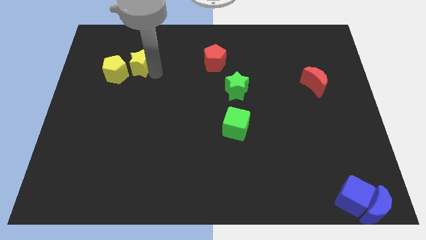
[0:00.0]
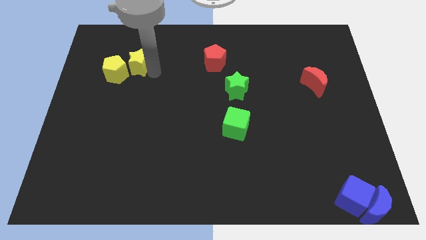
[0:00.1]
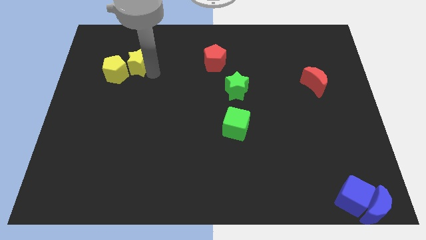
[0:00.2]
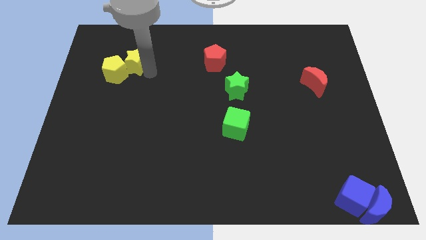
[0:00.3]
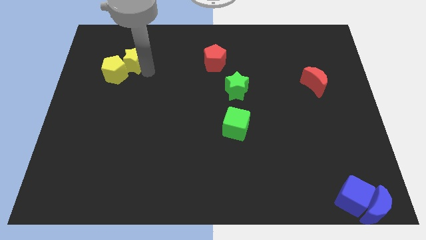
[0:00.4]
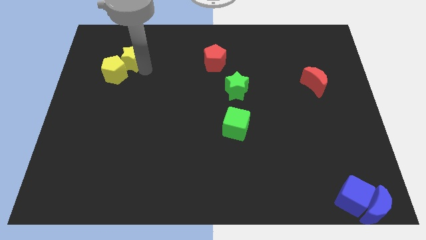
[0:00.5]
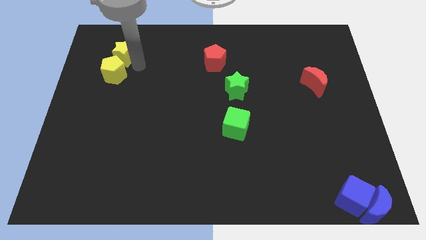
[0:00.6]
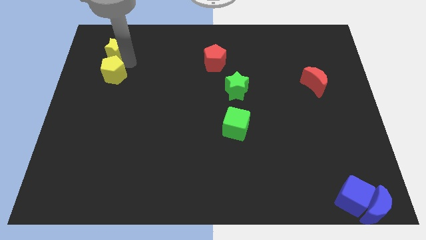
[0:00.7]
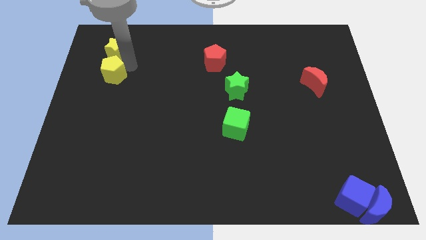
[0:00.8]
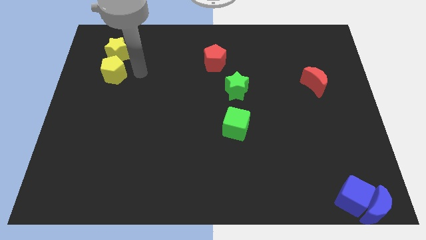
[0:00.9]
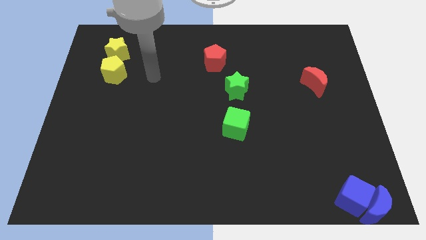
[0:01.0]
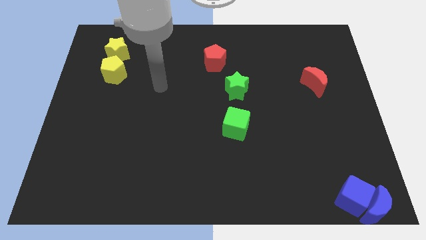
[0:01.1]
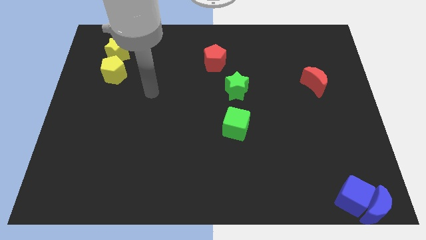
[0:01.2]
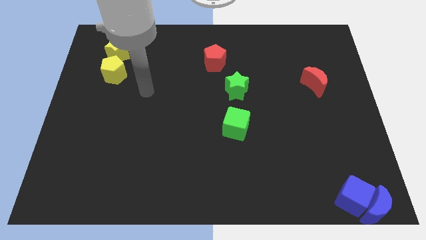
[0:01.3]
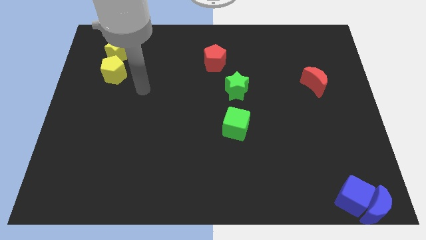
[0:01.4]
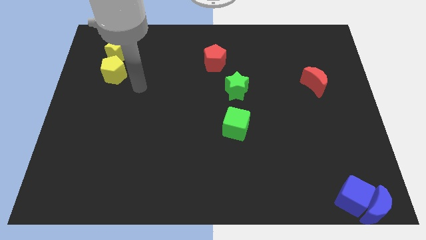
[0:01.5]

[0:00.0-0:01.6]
move the yellow star to the top of the yellow pentagon

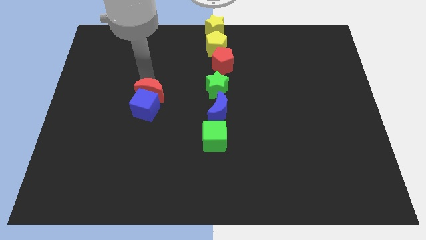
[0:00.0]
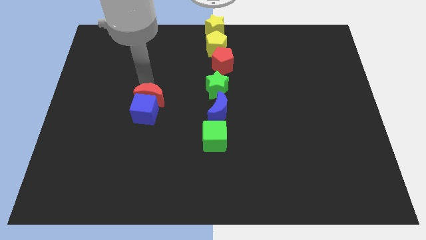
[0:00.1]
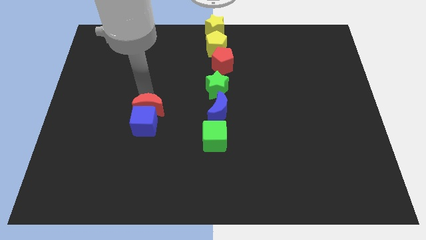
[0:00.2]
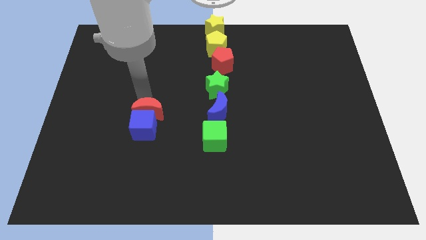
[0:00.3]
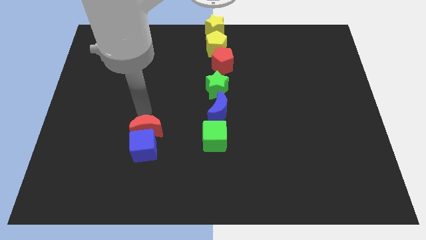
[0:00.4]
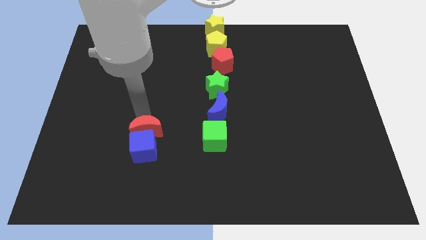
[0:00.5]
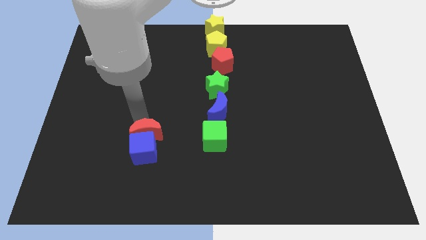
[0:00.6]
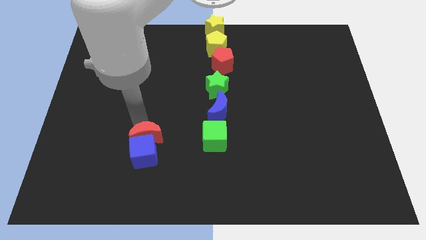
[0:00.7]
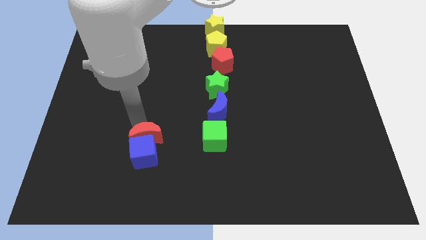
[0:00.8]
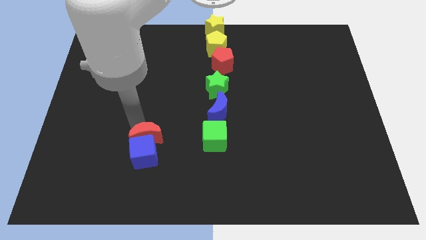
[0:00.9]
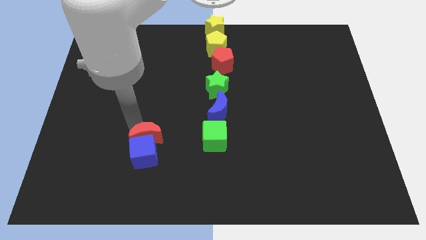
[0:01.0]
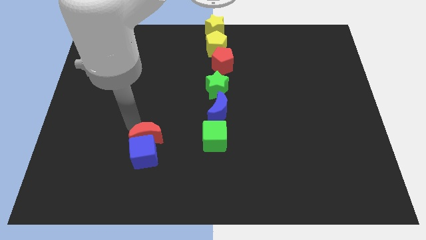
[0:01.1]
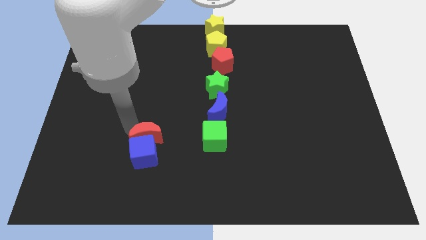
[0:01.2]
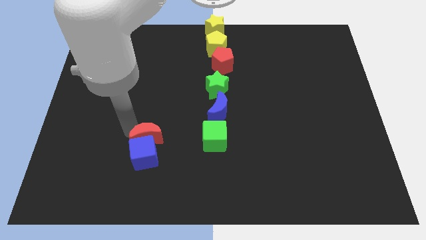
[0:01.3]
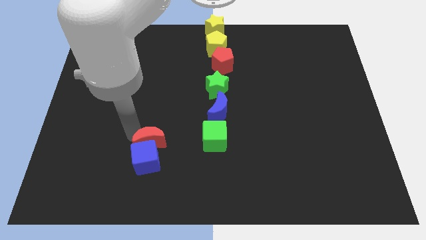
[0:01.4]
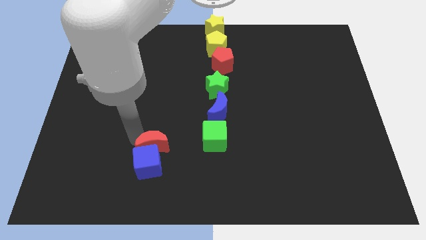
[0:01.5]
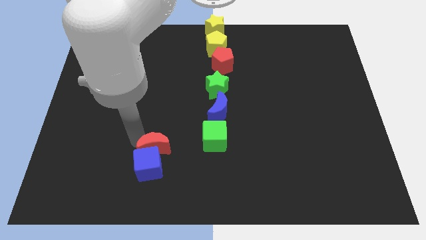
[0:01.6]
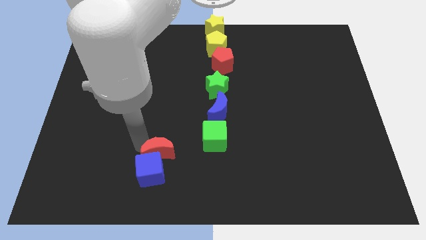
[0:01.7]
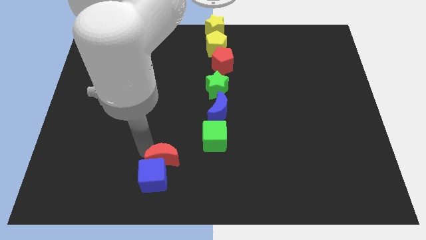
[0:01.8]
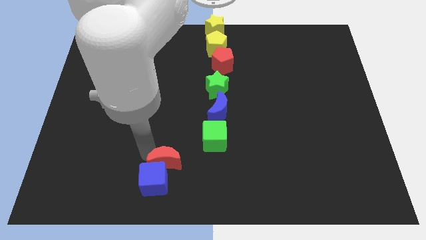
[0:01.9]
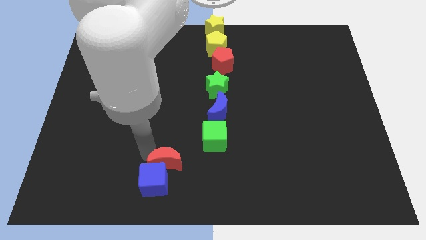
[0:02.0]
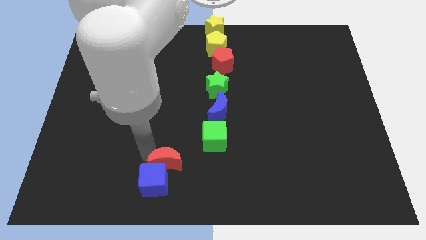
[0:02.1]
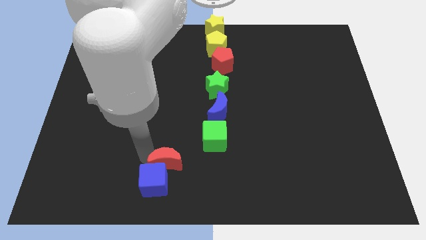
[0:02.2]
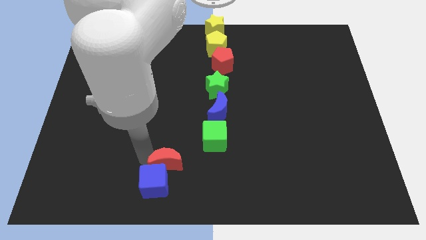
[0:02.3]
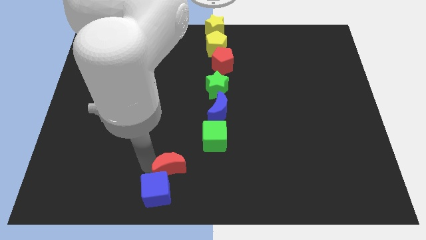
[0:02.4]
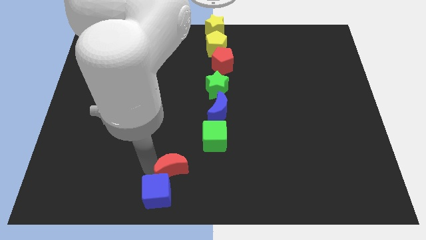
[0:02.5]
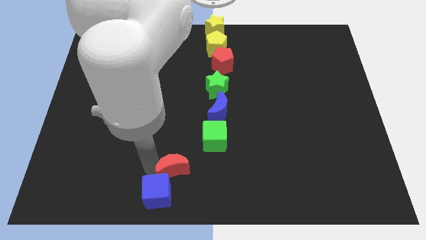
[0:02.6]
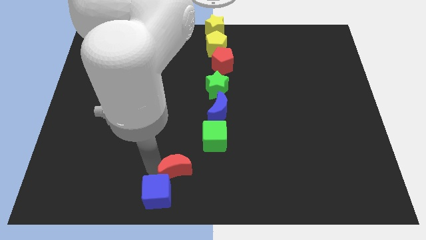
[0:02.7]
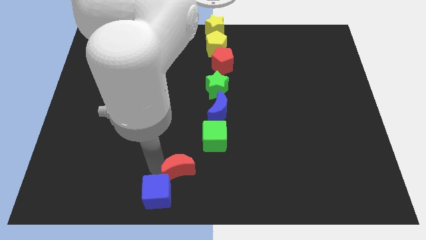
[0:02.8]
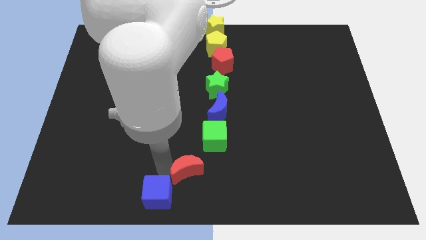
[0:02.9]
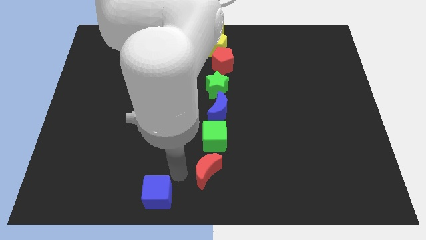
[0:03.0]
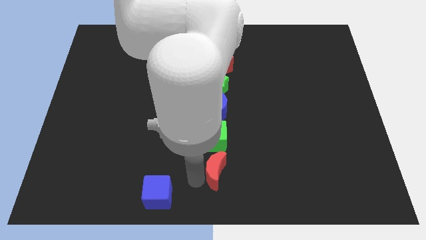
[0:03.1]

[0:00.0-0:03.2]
place red crescent below green cube

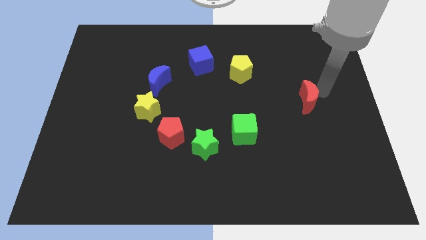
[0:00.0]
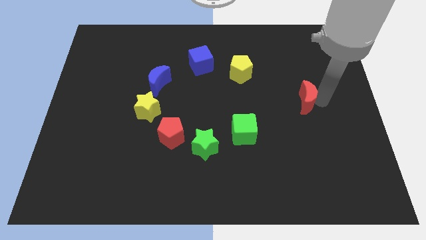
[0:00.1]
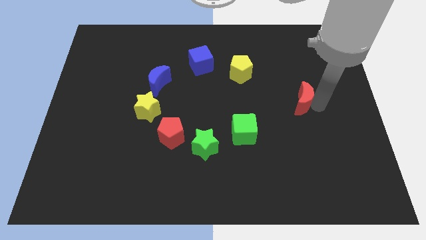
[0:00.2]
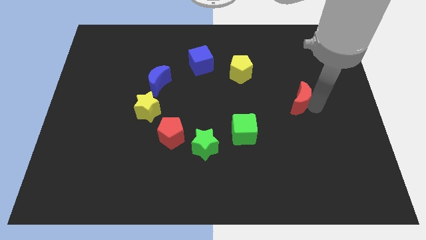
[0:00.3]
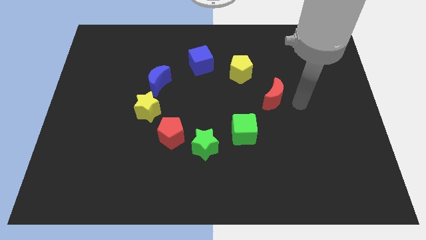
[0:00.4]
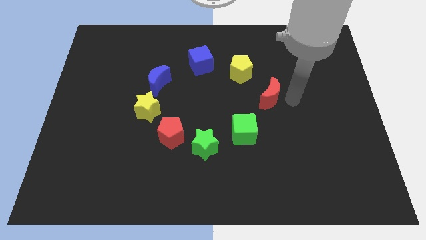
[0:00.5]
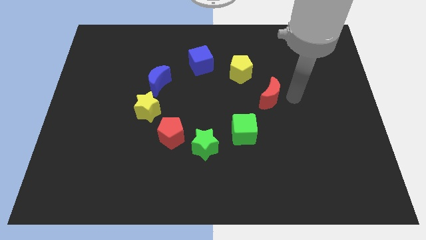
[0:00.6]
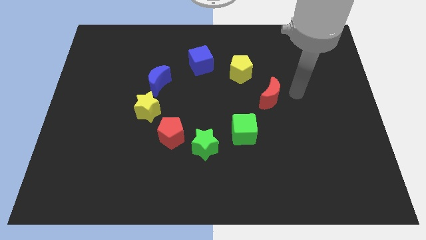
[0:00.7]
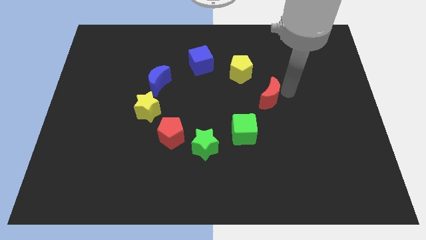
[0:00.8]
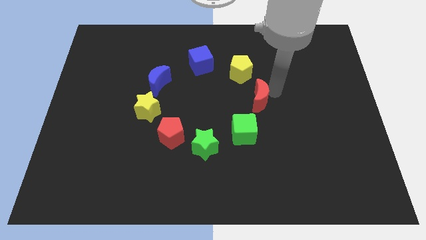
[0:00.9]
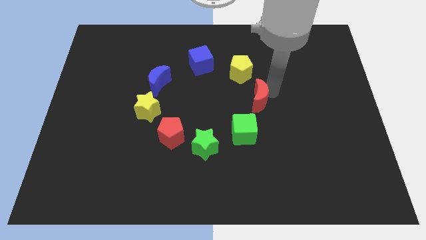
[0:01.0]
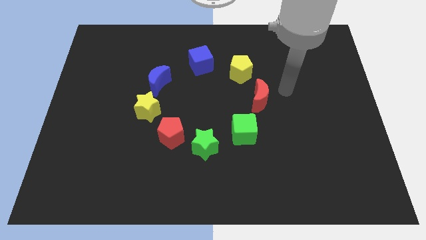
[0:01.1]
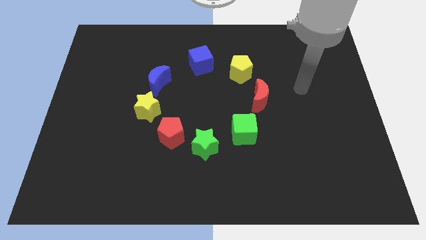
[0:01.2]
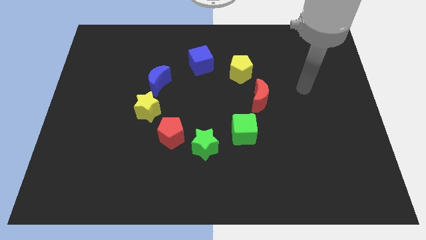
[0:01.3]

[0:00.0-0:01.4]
place red moon to the top right of green cube

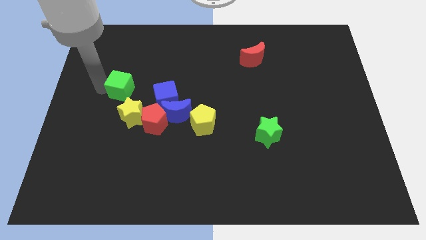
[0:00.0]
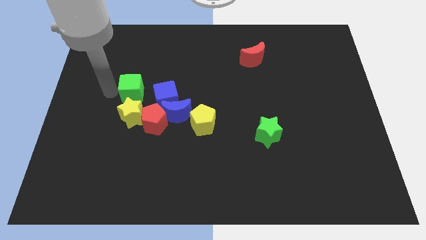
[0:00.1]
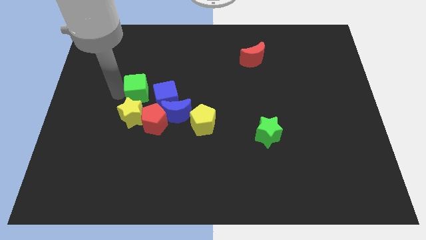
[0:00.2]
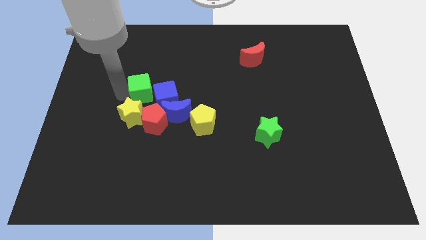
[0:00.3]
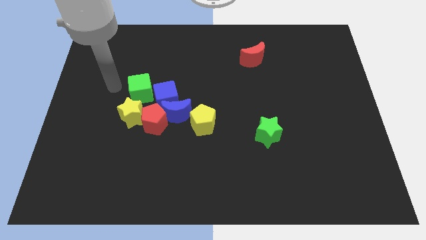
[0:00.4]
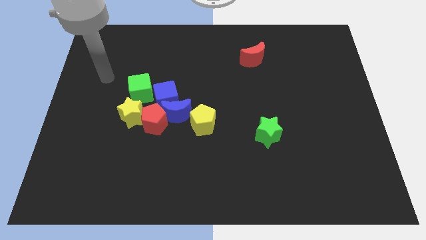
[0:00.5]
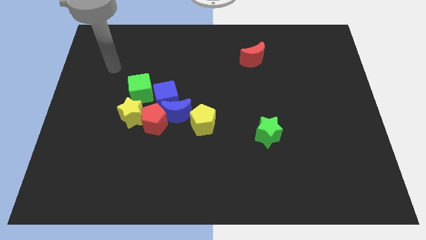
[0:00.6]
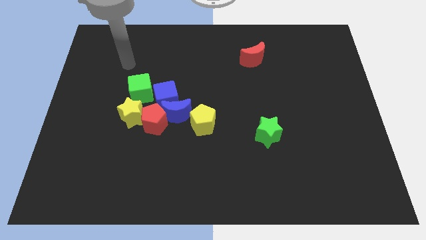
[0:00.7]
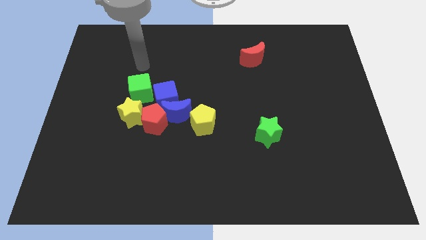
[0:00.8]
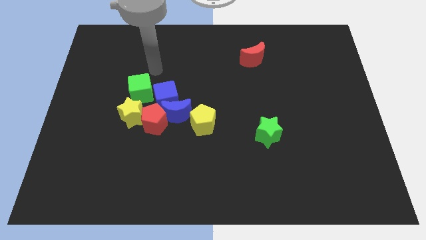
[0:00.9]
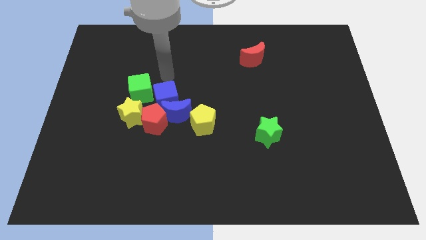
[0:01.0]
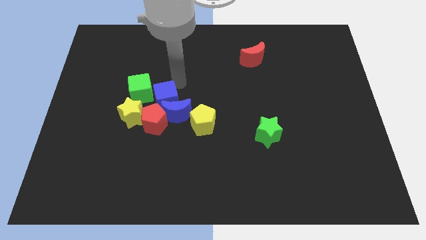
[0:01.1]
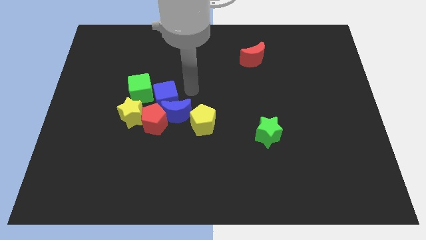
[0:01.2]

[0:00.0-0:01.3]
place the green cube to the top left of the blue cube

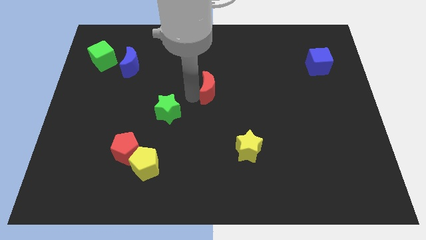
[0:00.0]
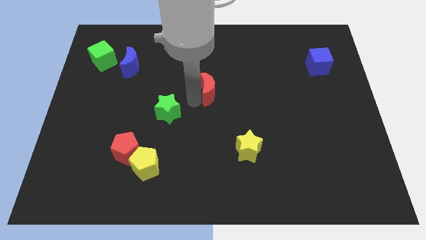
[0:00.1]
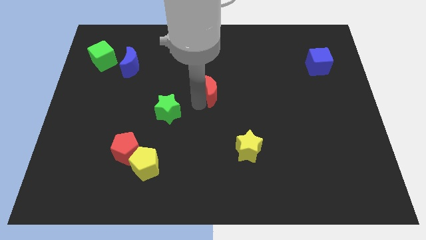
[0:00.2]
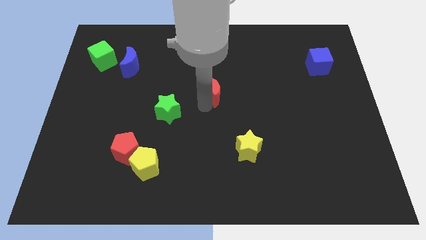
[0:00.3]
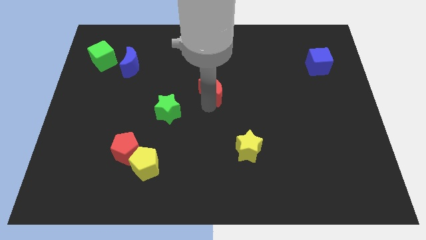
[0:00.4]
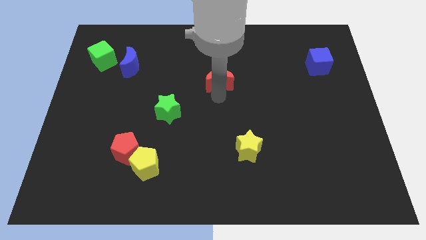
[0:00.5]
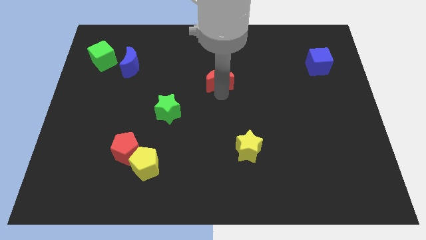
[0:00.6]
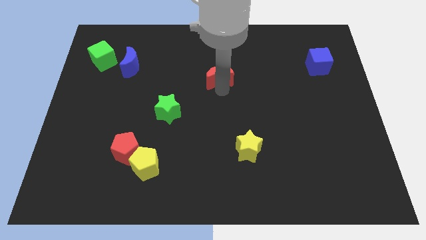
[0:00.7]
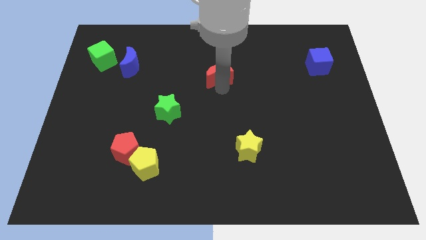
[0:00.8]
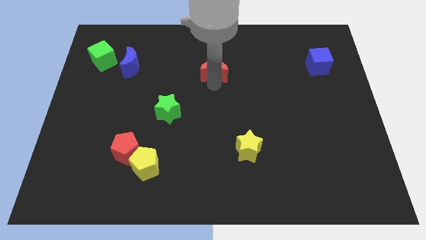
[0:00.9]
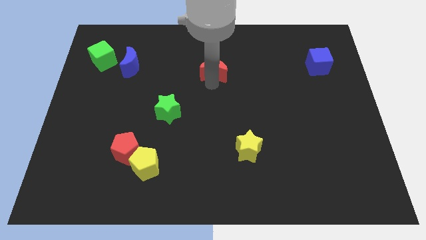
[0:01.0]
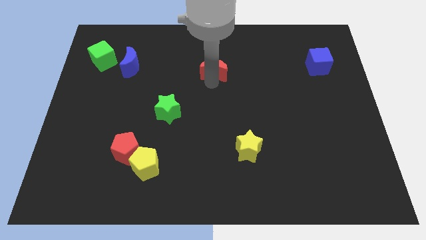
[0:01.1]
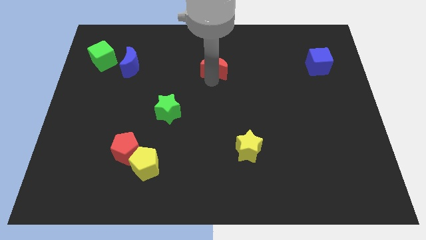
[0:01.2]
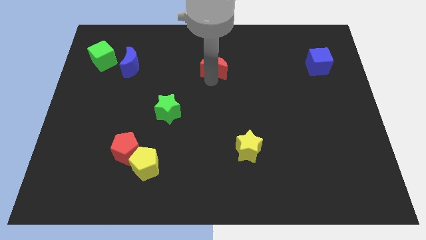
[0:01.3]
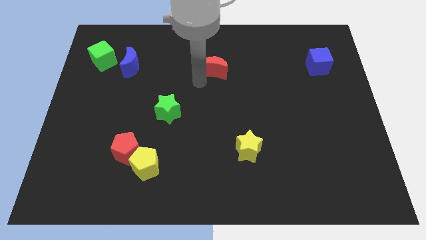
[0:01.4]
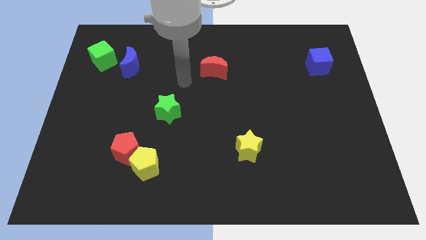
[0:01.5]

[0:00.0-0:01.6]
move the red crescent towards the top center of the board
